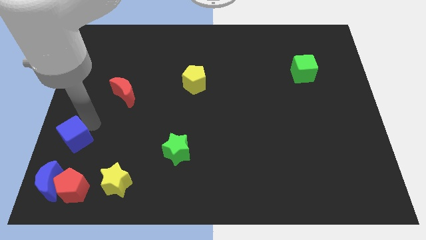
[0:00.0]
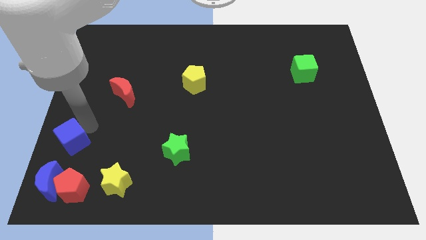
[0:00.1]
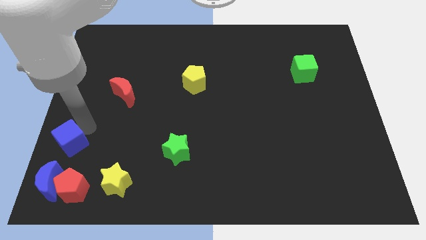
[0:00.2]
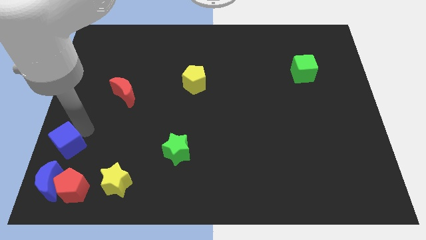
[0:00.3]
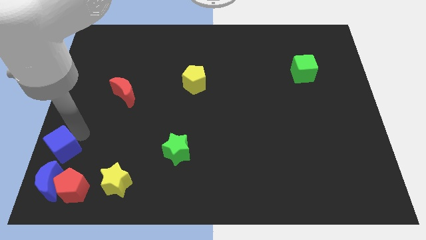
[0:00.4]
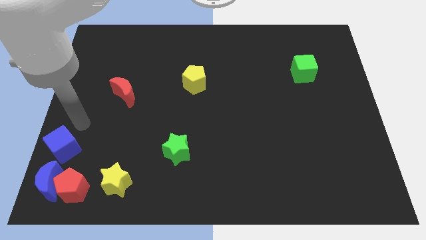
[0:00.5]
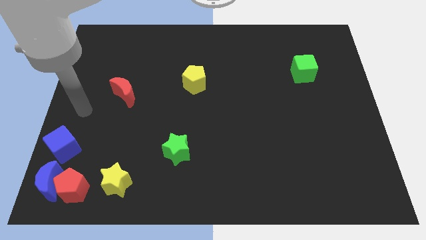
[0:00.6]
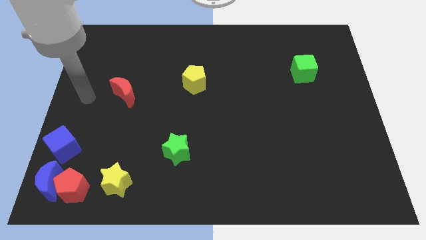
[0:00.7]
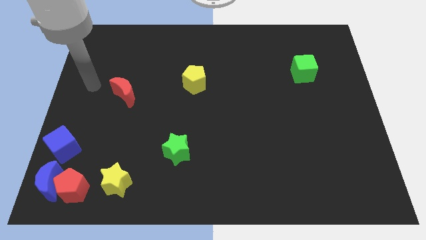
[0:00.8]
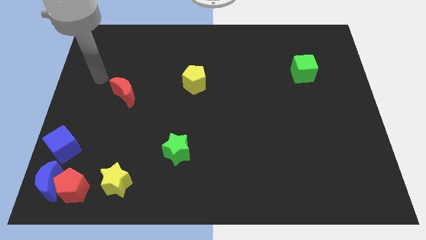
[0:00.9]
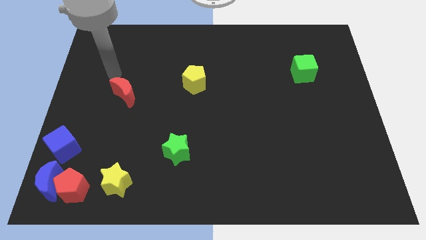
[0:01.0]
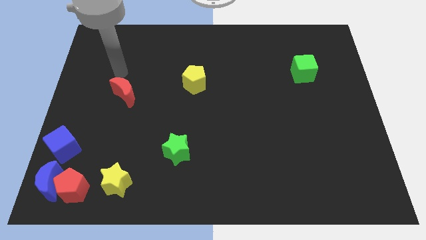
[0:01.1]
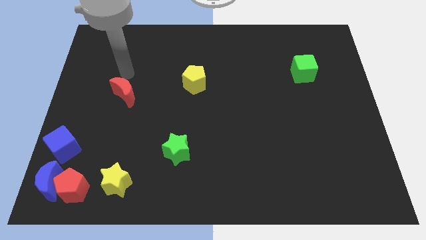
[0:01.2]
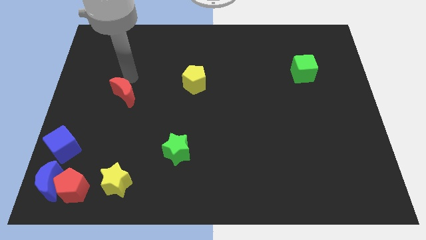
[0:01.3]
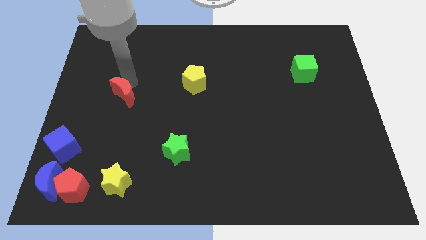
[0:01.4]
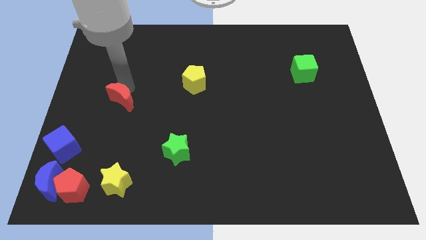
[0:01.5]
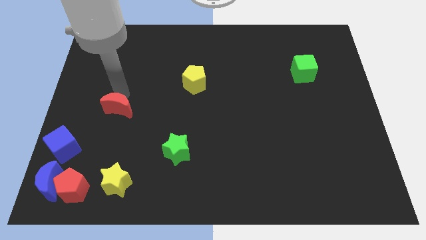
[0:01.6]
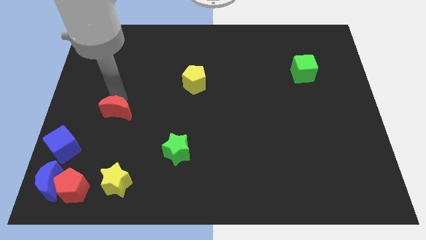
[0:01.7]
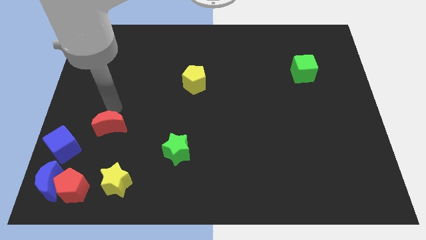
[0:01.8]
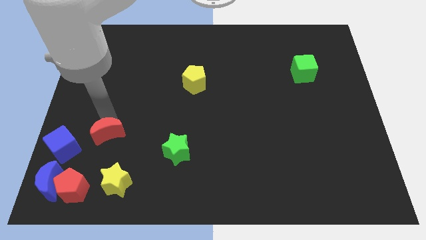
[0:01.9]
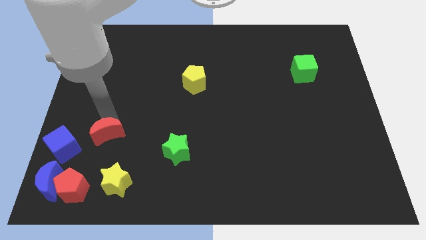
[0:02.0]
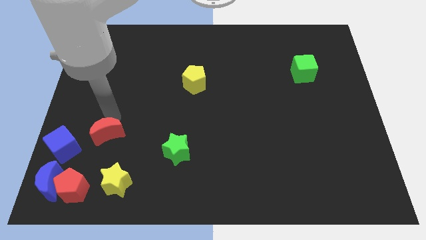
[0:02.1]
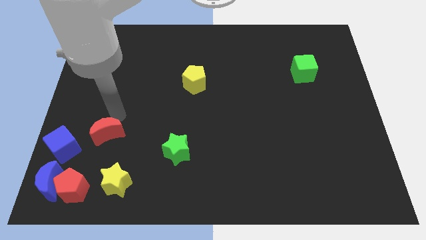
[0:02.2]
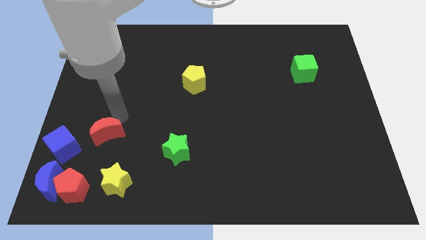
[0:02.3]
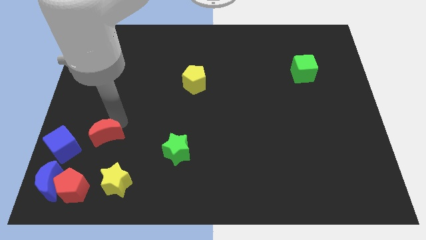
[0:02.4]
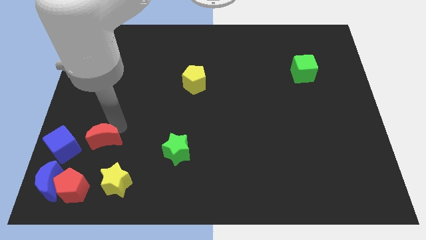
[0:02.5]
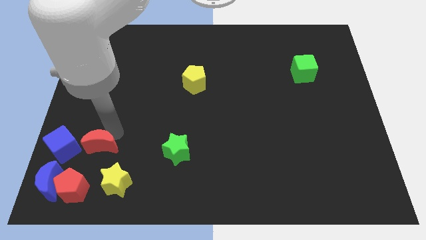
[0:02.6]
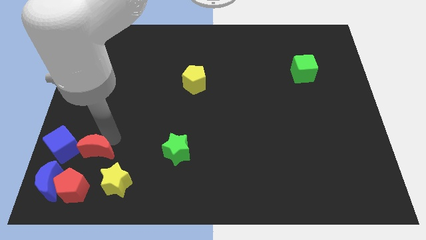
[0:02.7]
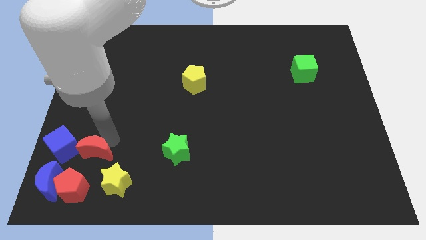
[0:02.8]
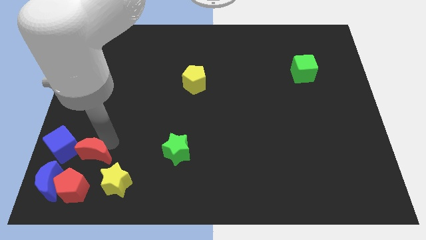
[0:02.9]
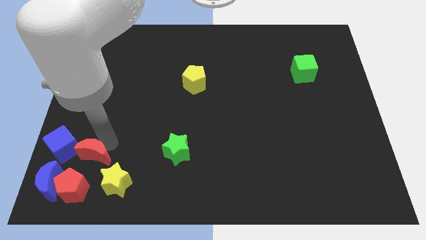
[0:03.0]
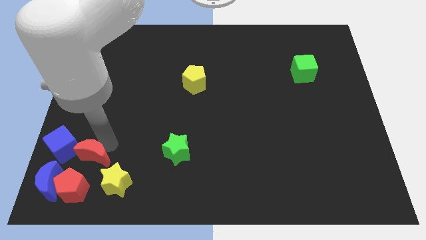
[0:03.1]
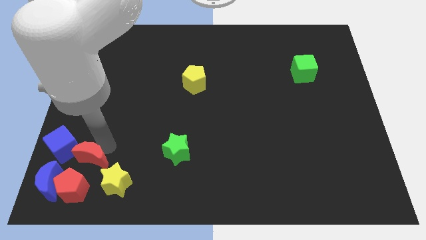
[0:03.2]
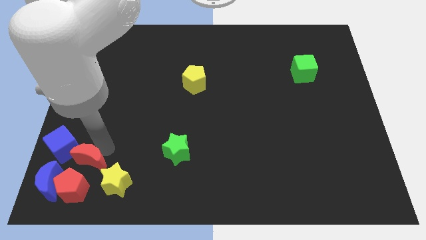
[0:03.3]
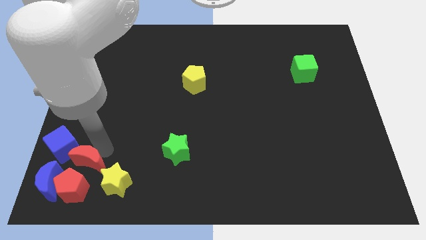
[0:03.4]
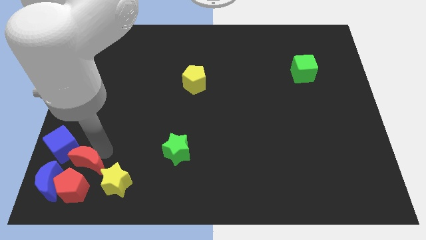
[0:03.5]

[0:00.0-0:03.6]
move blue cube and red crescent towards red pentagon

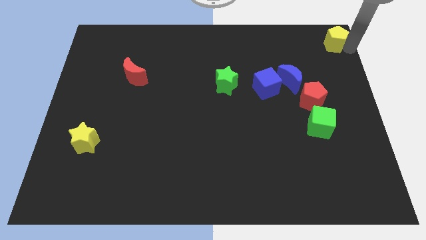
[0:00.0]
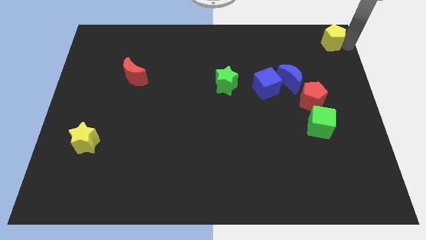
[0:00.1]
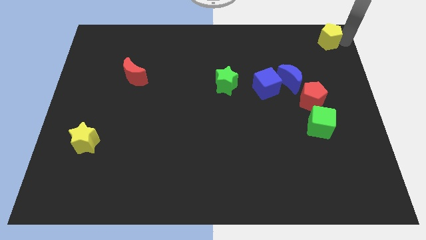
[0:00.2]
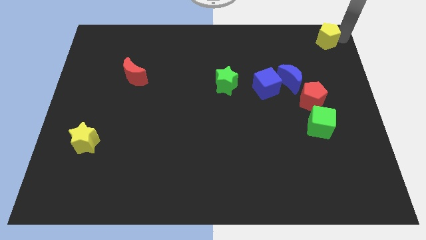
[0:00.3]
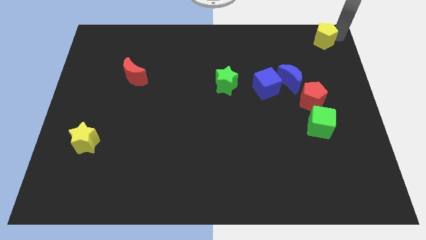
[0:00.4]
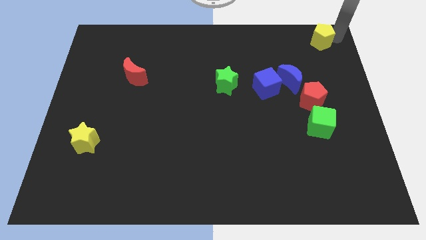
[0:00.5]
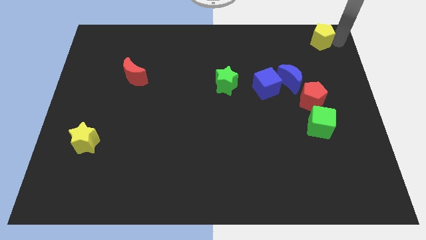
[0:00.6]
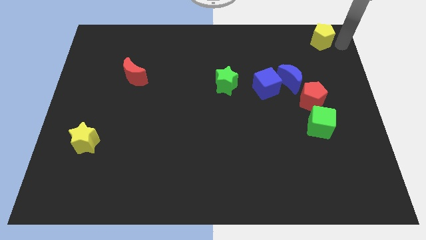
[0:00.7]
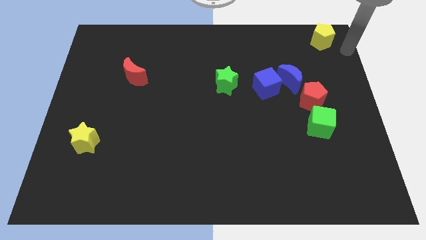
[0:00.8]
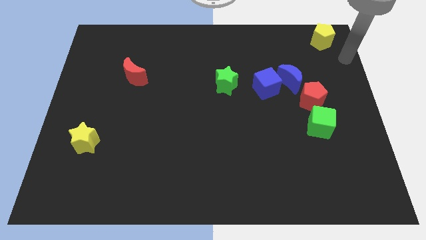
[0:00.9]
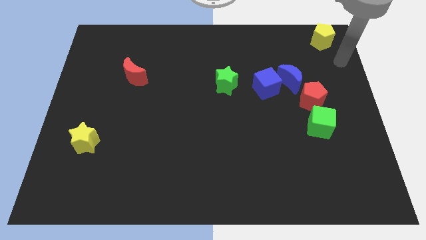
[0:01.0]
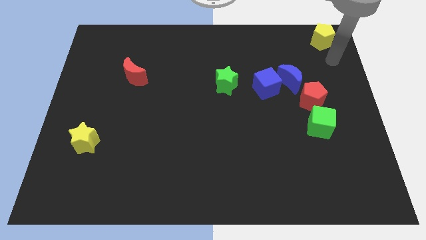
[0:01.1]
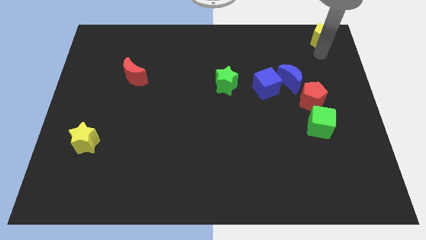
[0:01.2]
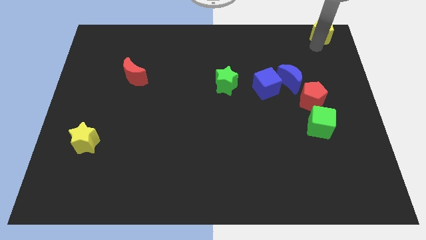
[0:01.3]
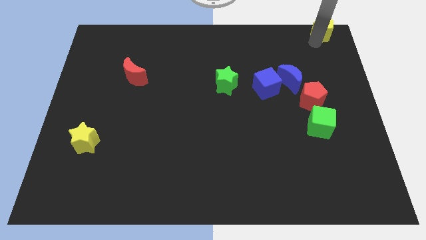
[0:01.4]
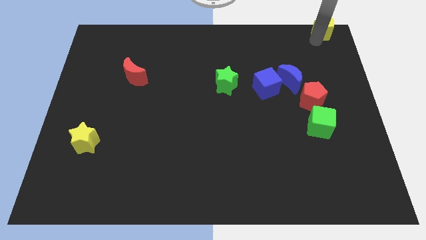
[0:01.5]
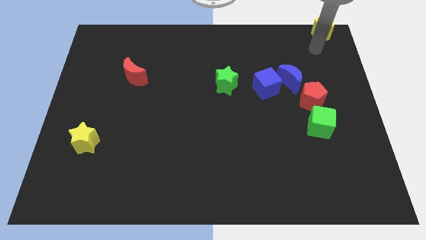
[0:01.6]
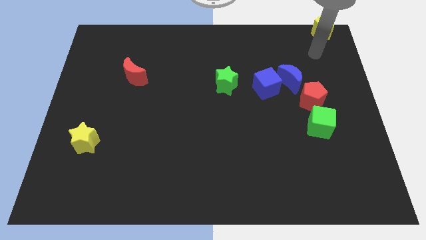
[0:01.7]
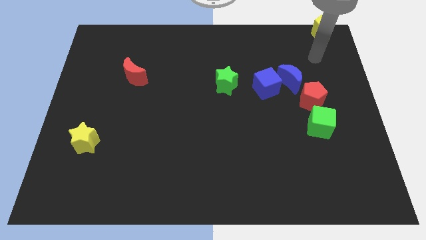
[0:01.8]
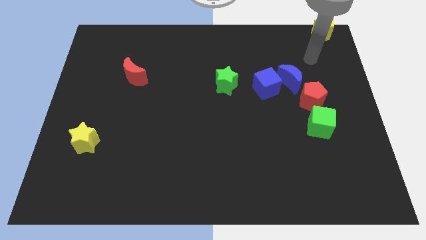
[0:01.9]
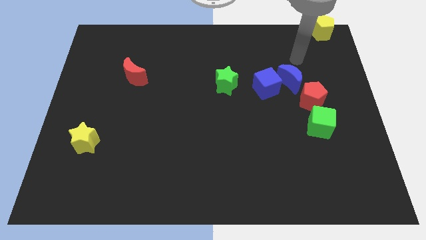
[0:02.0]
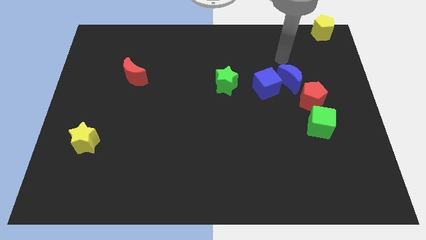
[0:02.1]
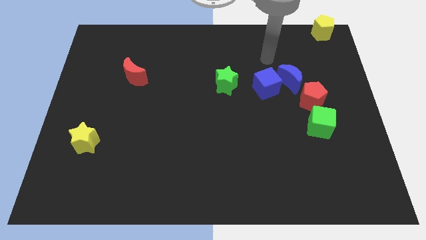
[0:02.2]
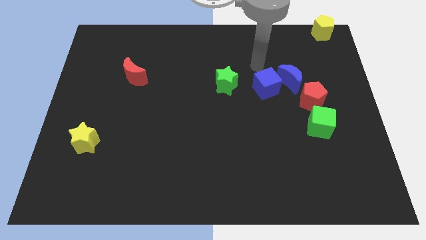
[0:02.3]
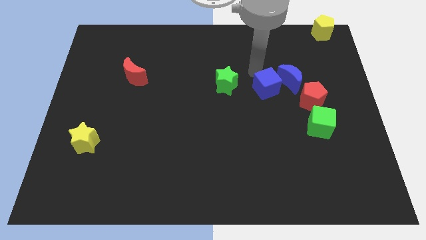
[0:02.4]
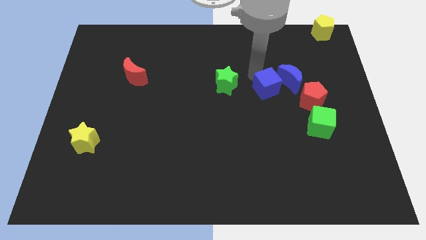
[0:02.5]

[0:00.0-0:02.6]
move your arm to the blue cube

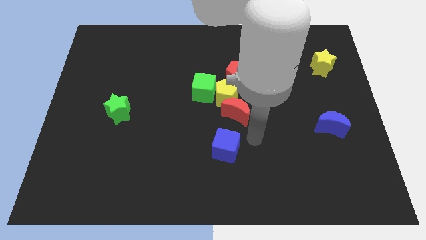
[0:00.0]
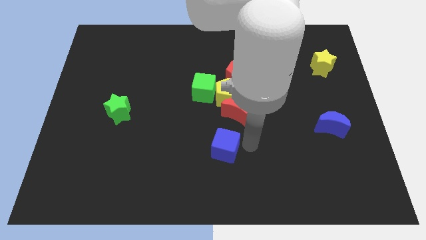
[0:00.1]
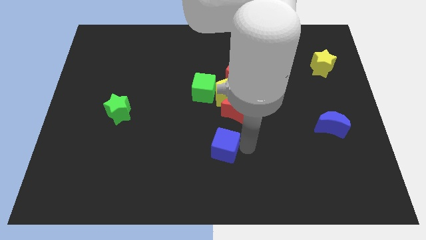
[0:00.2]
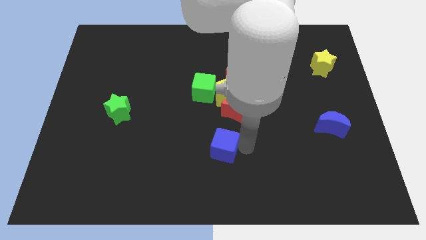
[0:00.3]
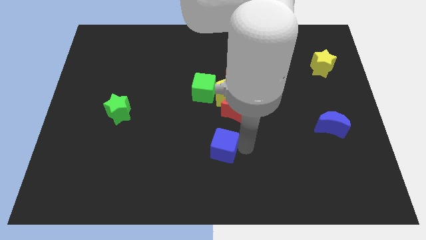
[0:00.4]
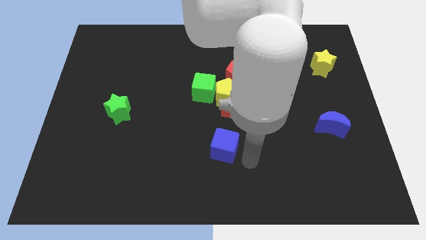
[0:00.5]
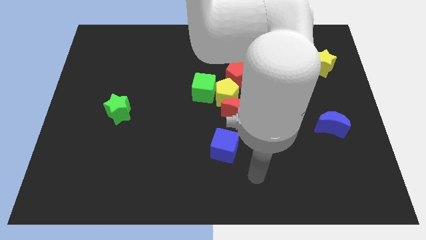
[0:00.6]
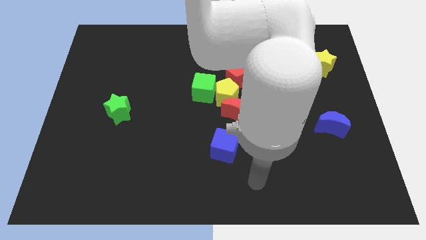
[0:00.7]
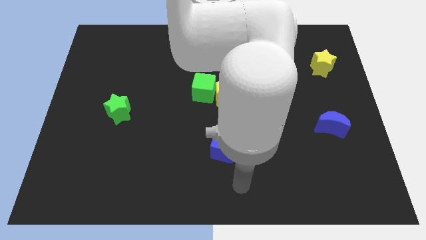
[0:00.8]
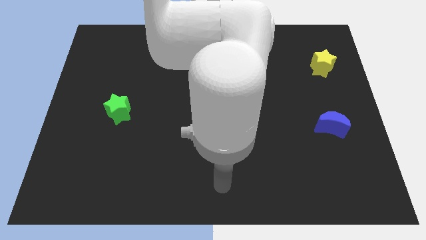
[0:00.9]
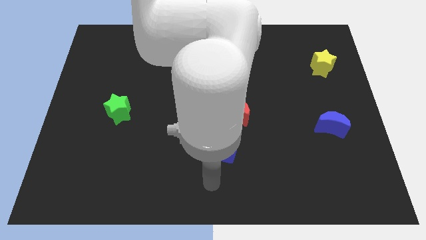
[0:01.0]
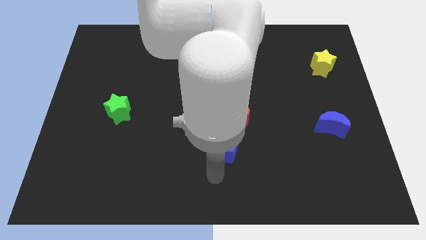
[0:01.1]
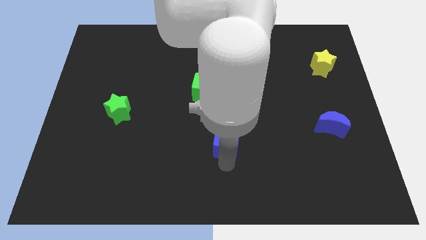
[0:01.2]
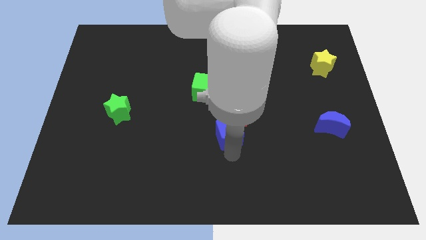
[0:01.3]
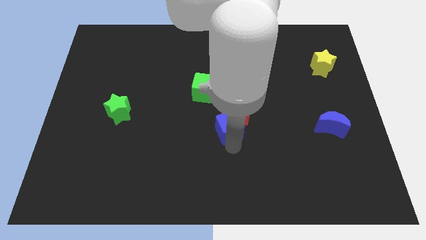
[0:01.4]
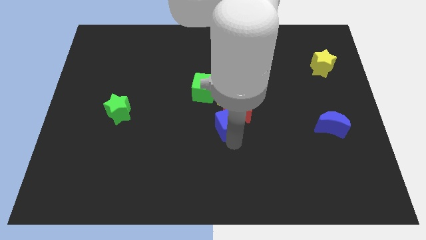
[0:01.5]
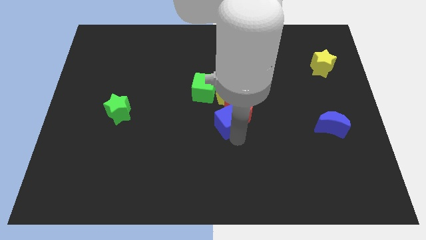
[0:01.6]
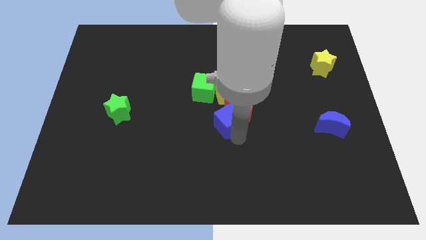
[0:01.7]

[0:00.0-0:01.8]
slide the blue cube into the bottom side of the red moon

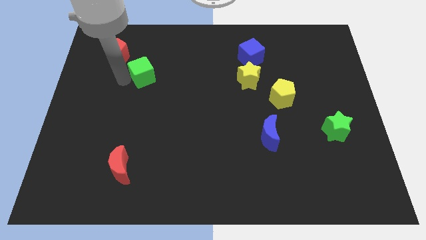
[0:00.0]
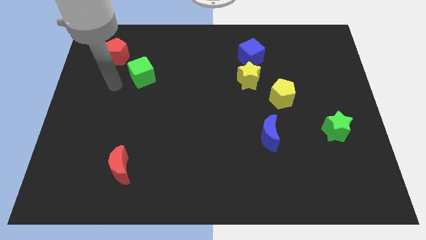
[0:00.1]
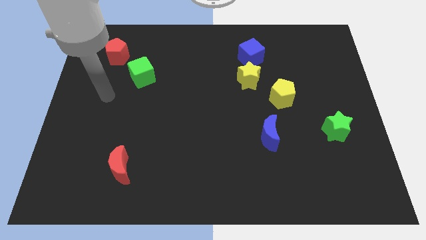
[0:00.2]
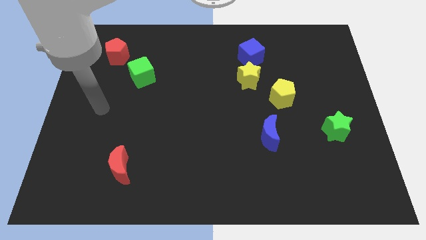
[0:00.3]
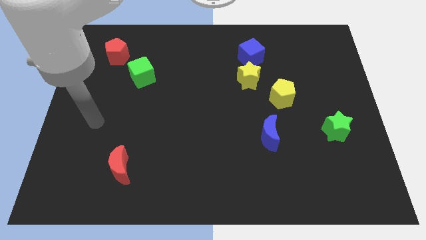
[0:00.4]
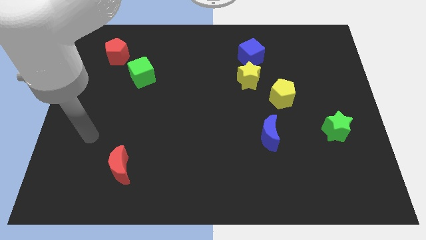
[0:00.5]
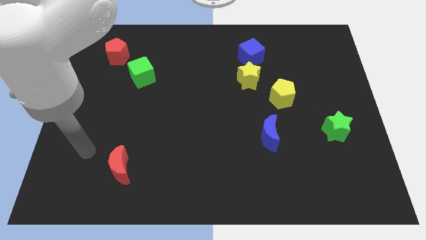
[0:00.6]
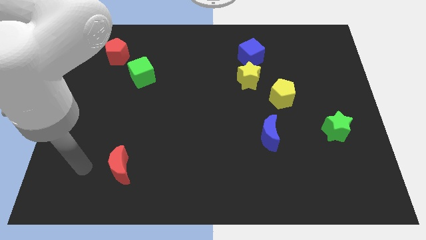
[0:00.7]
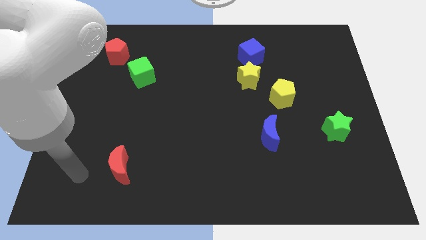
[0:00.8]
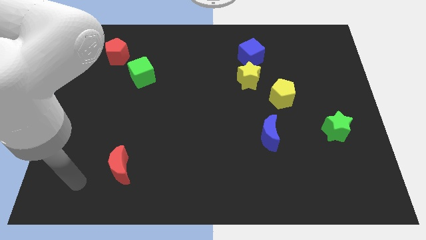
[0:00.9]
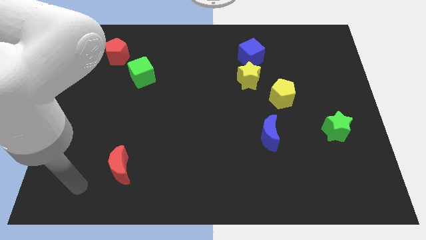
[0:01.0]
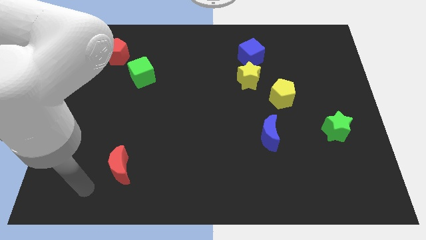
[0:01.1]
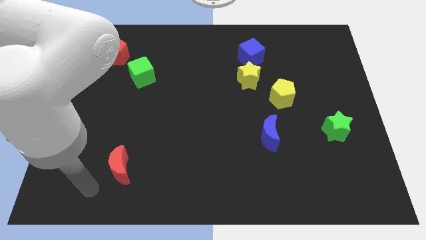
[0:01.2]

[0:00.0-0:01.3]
move the arm away from the green cube
